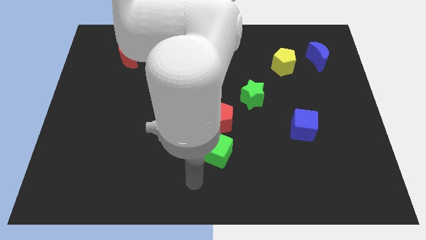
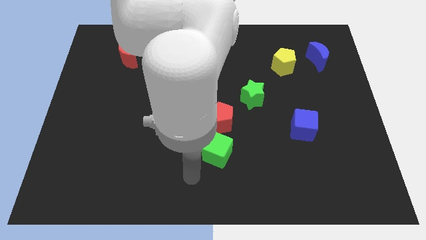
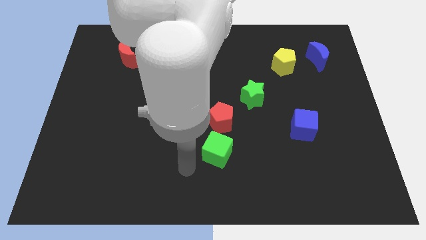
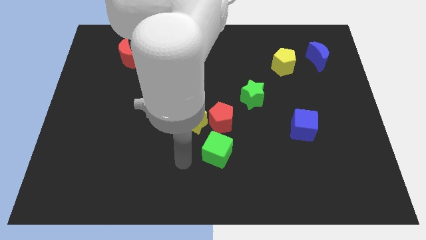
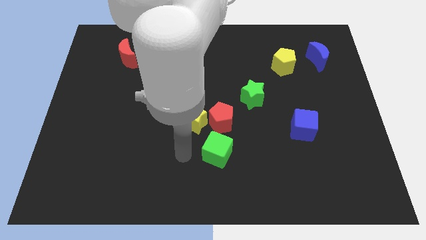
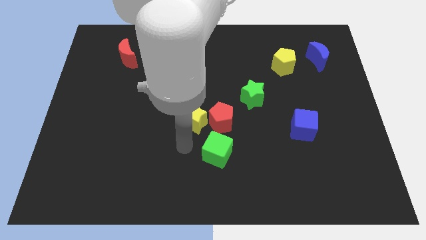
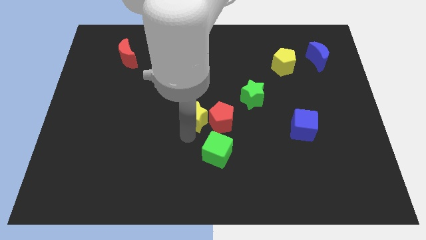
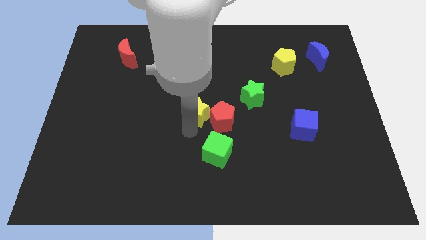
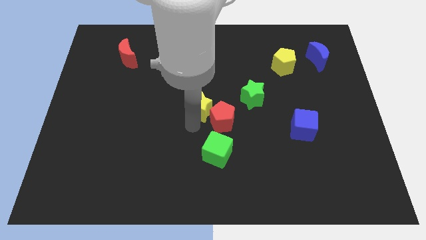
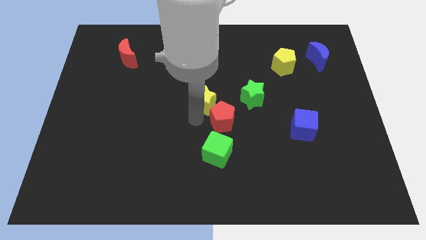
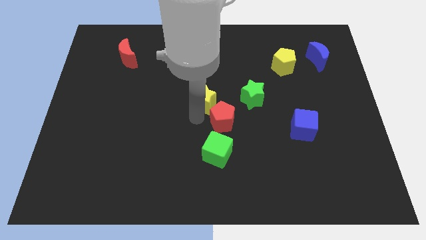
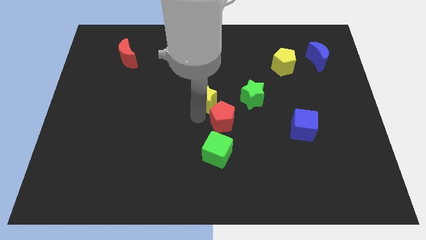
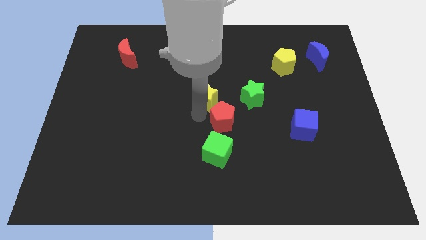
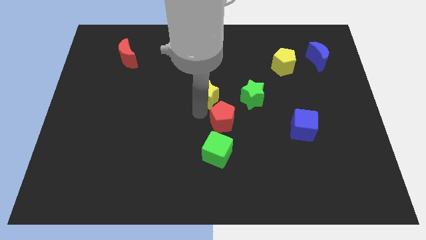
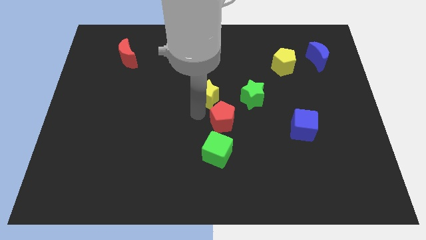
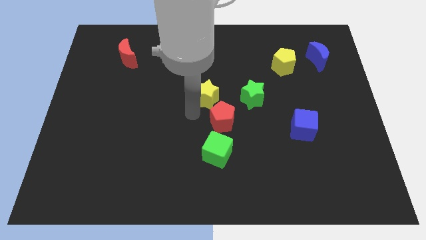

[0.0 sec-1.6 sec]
place yellow star to the center of the board

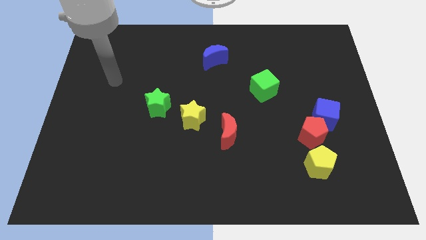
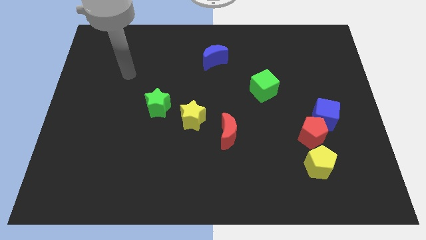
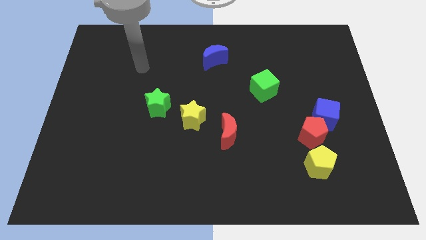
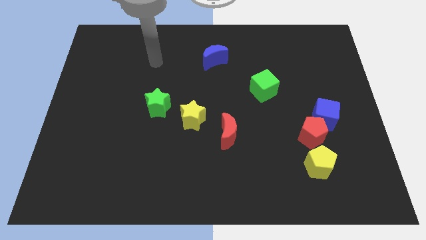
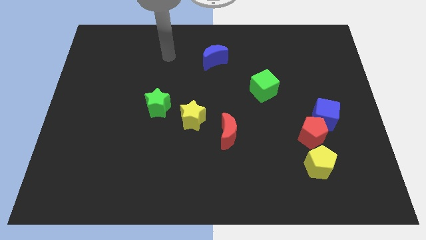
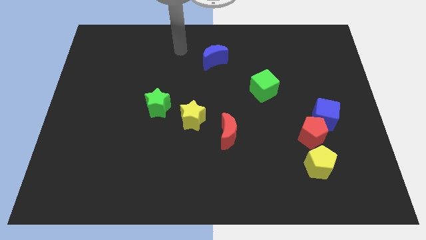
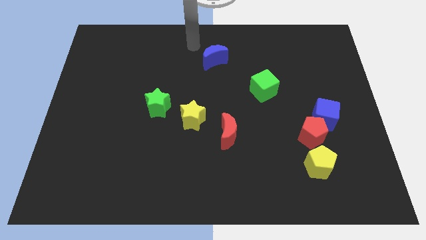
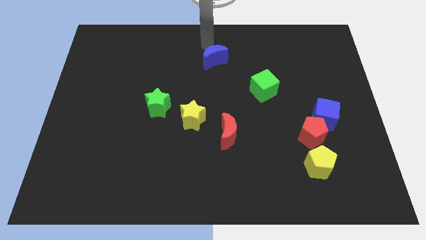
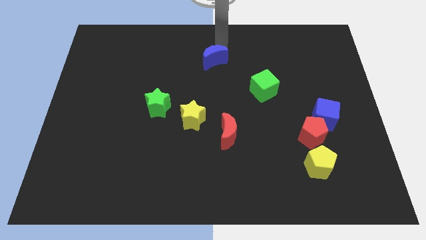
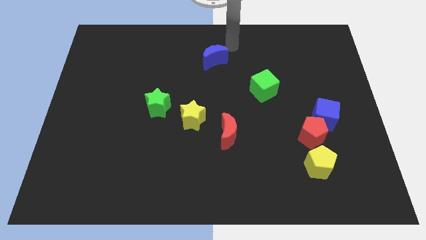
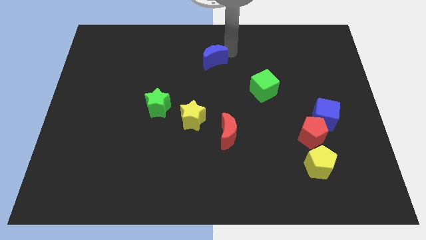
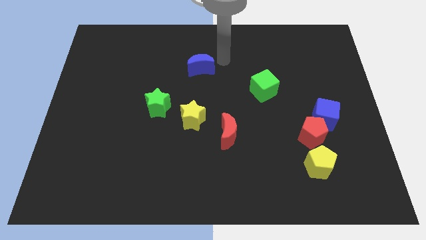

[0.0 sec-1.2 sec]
go near the blue moon

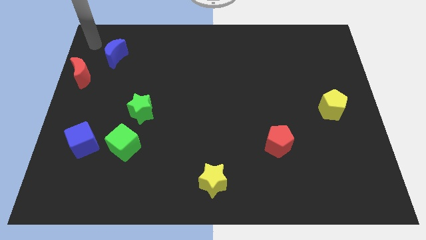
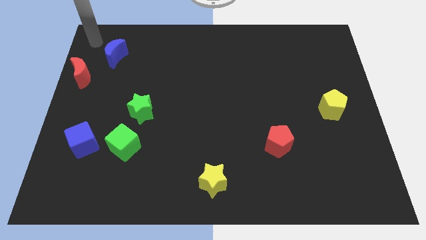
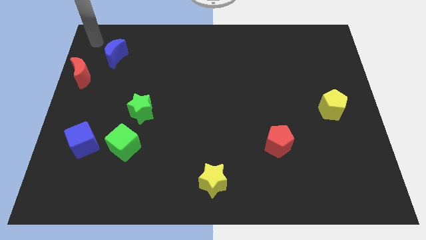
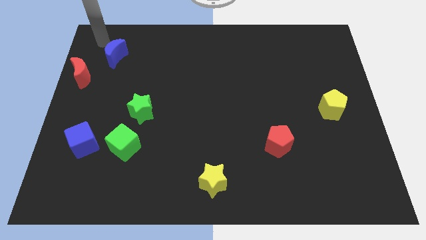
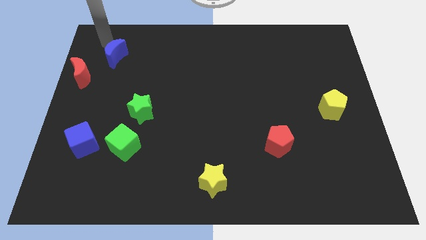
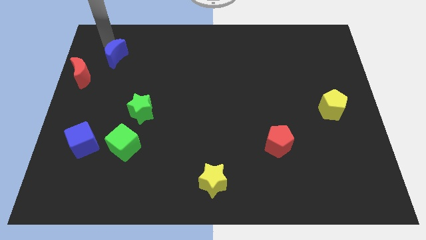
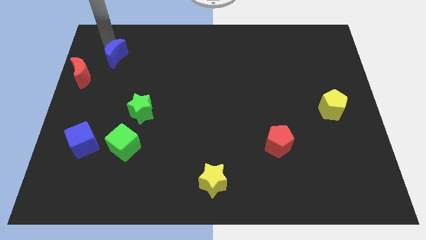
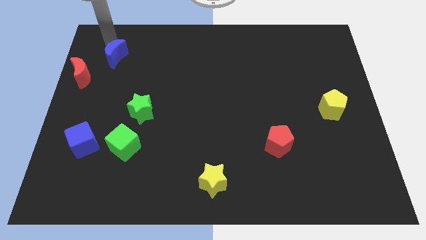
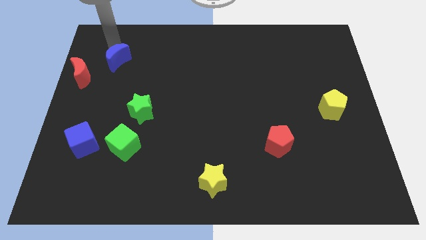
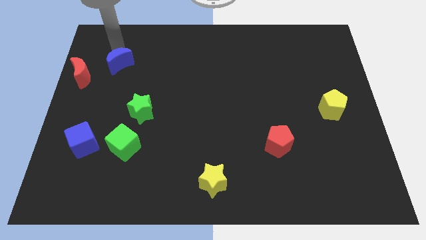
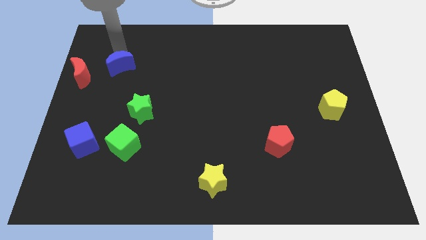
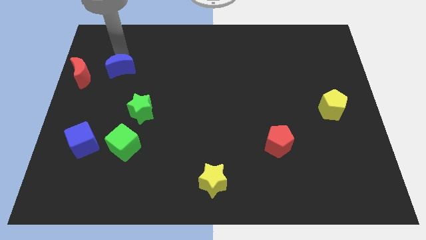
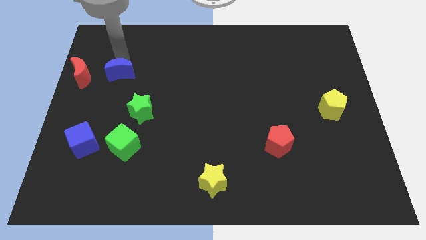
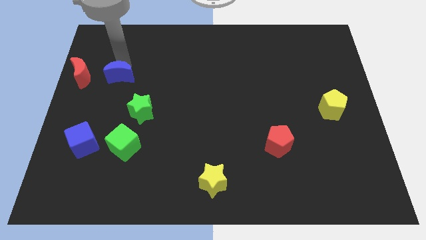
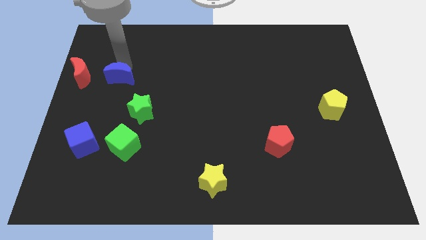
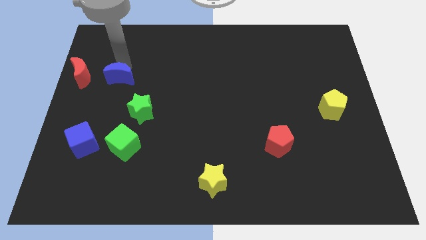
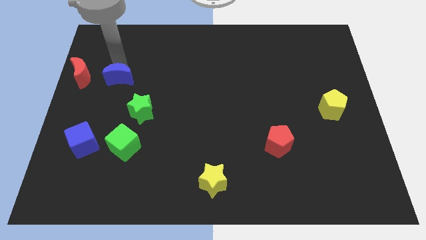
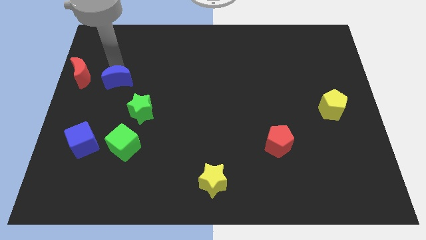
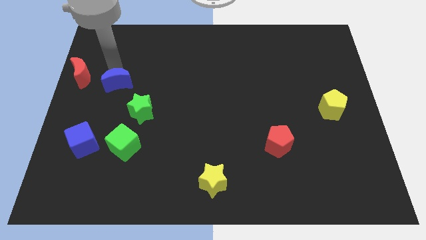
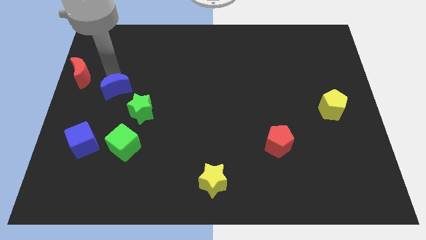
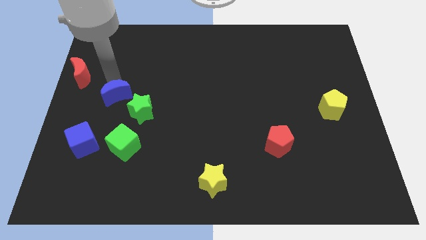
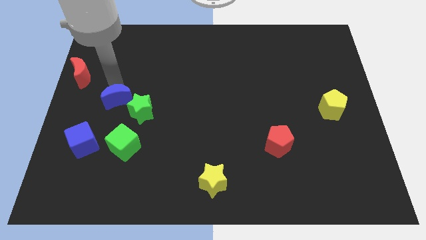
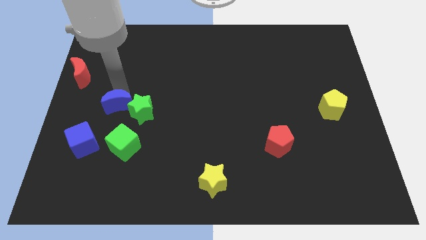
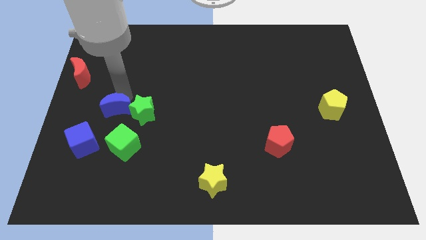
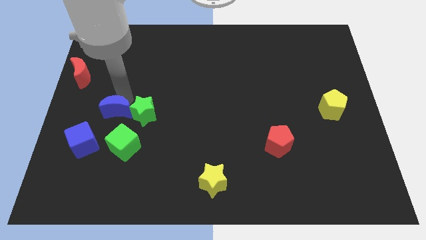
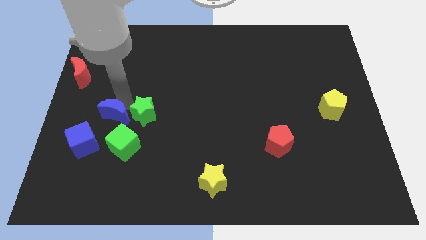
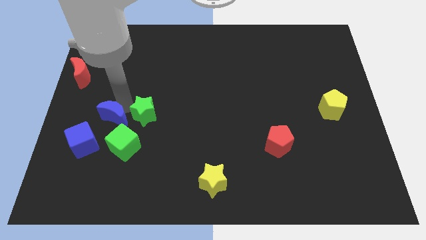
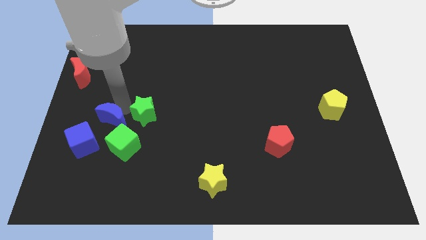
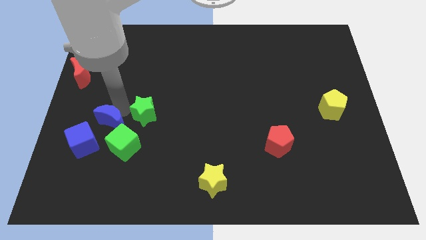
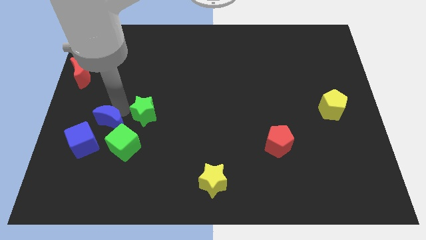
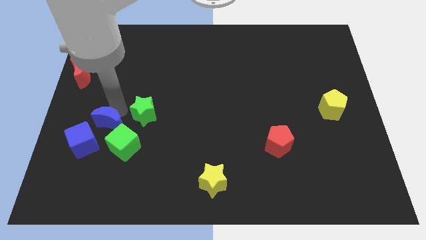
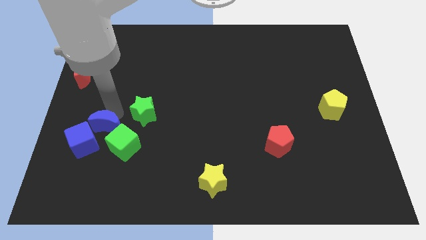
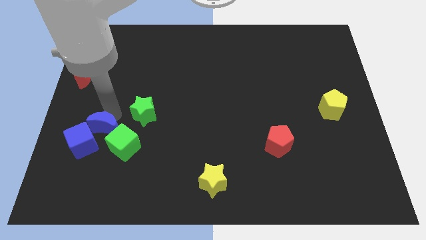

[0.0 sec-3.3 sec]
move the blue crescent close to the blue cube

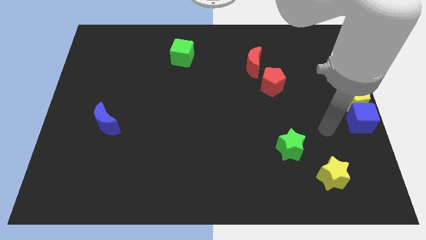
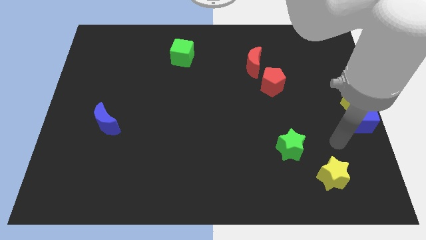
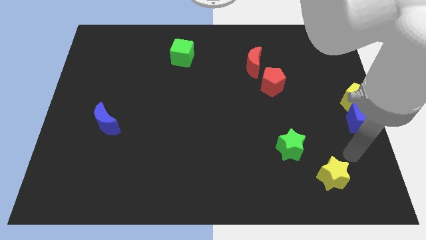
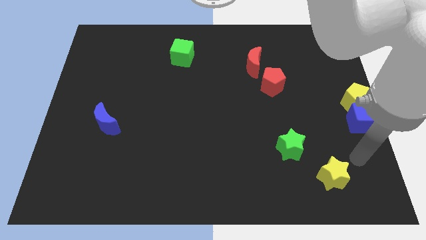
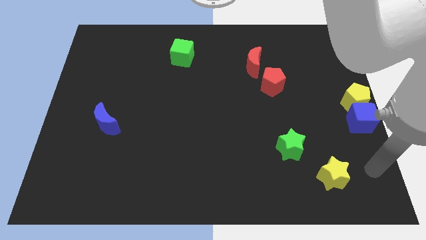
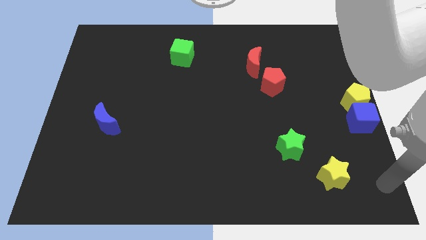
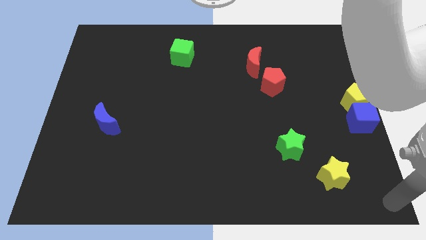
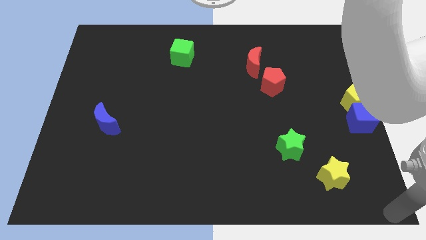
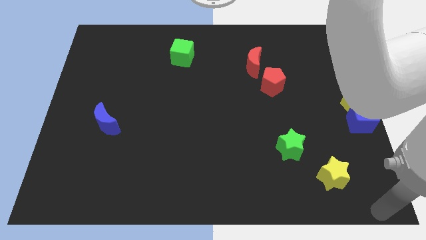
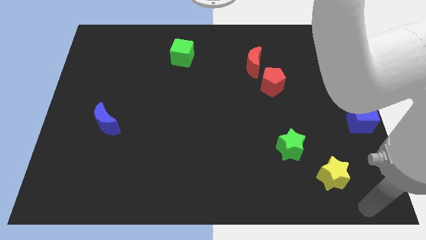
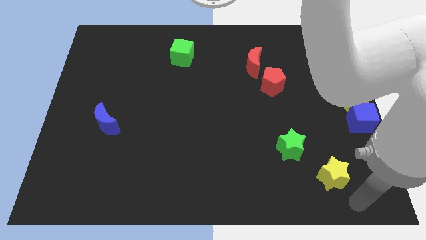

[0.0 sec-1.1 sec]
place your hand at the bottom right corner

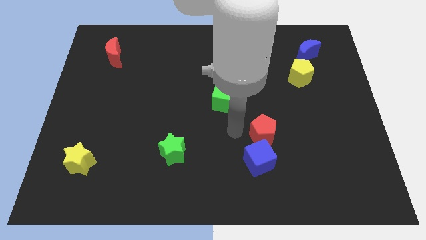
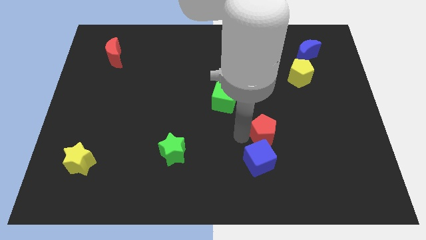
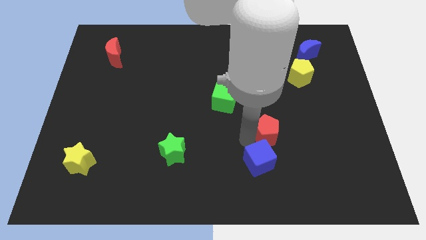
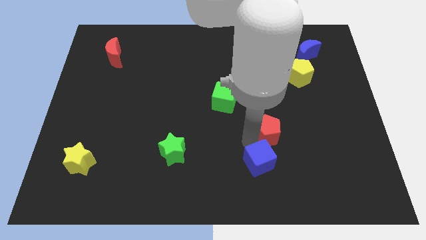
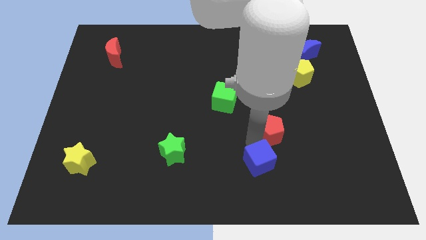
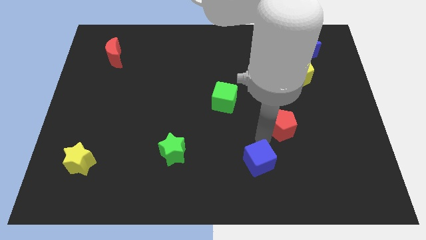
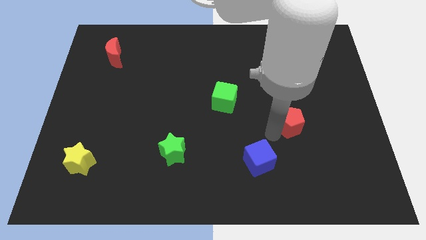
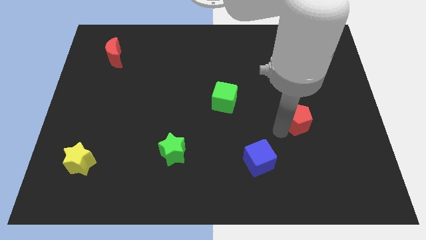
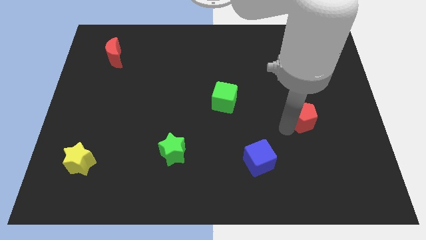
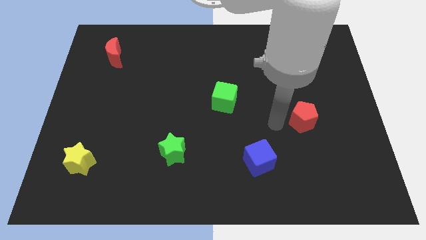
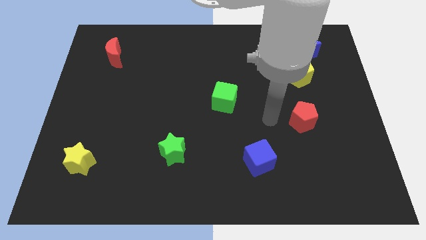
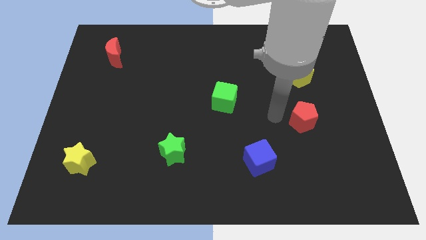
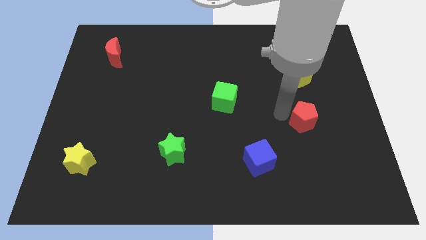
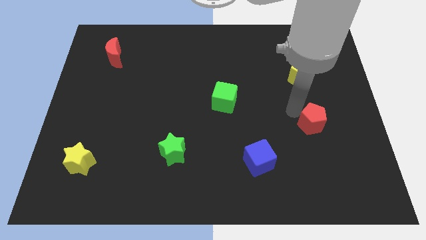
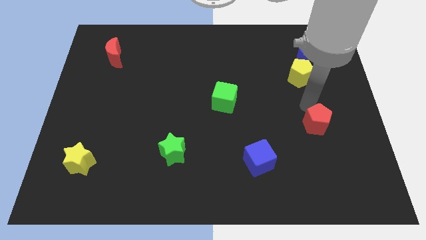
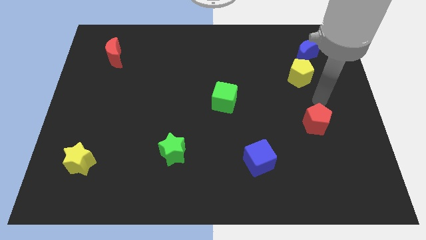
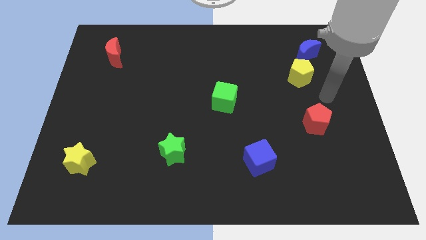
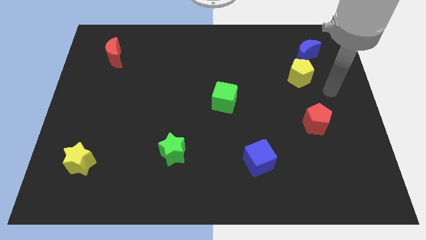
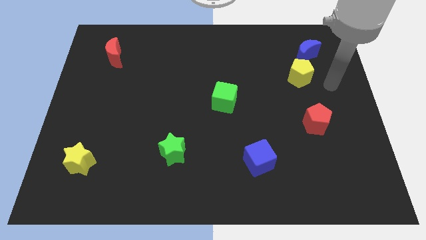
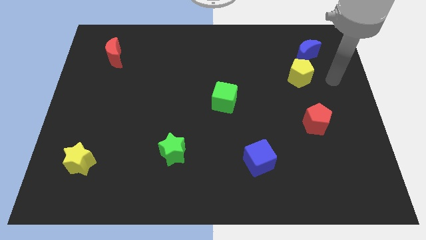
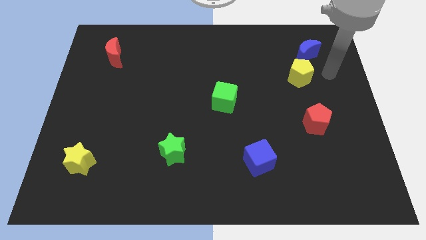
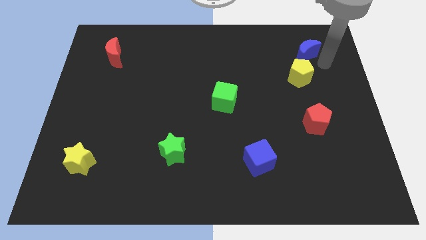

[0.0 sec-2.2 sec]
separate red pentagon from the blue cube
